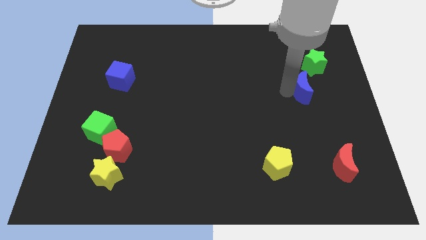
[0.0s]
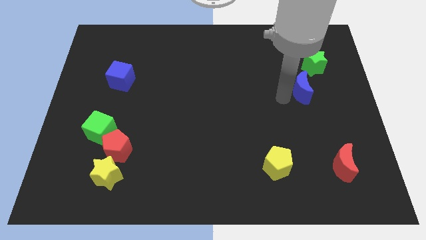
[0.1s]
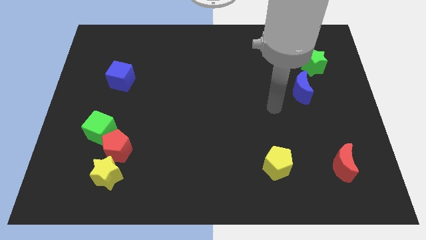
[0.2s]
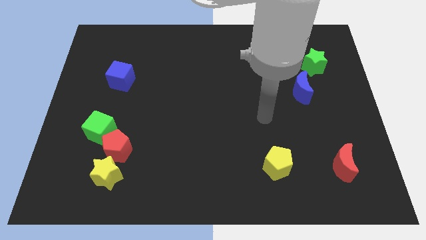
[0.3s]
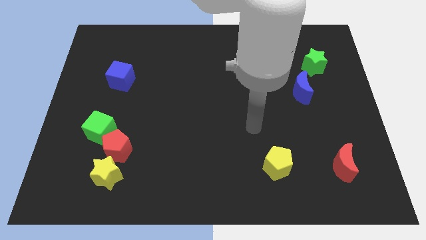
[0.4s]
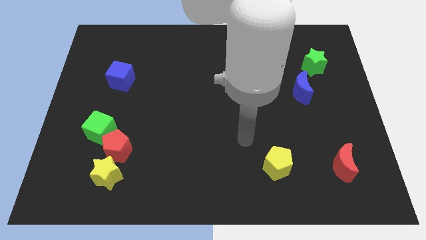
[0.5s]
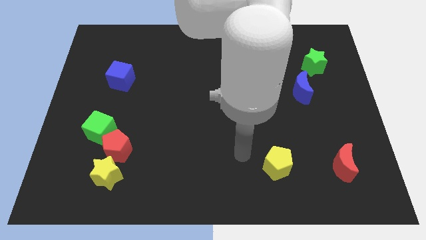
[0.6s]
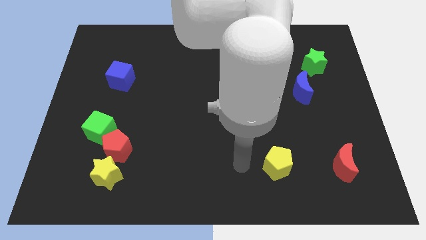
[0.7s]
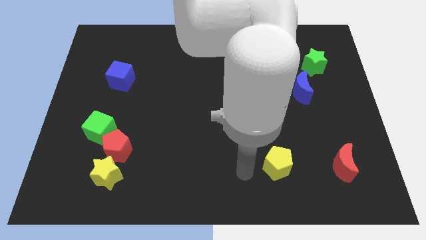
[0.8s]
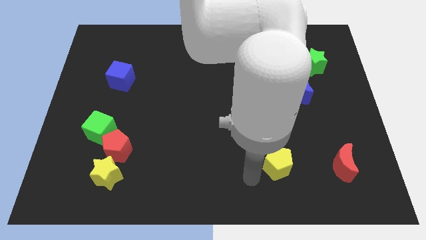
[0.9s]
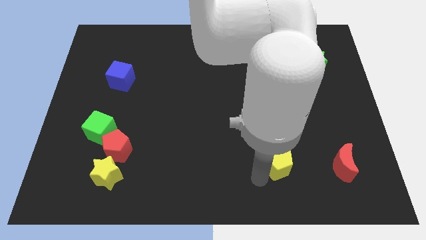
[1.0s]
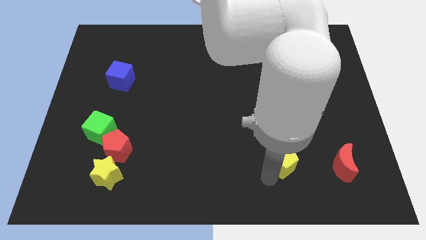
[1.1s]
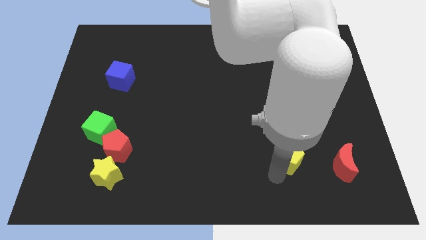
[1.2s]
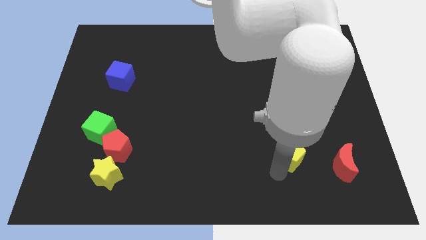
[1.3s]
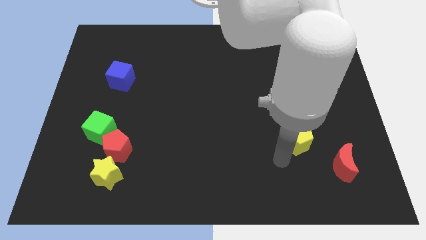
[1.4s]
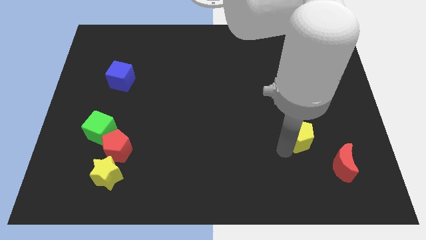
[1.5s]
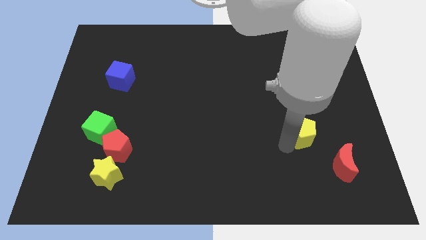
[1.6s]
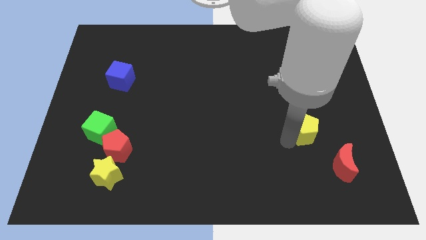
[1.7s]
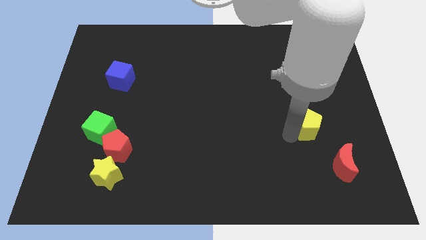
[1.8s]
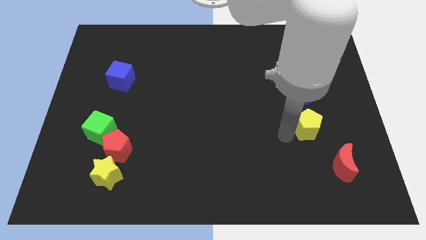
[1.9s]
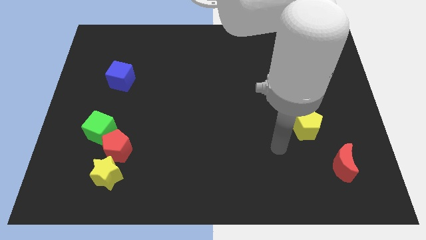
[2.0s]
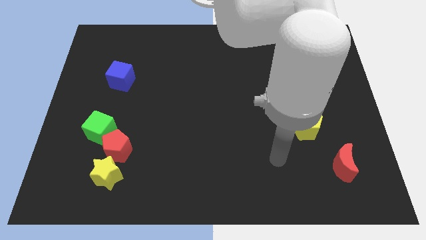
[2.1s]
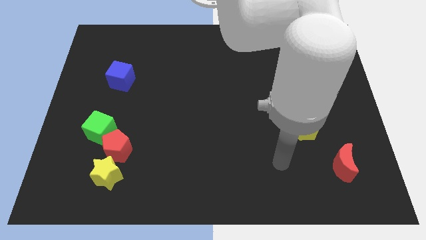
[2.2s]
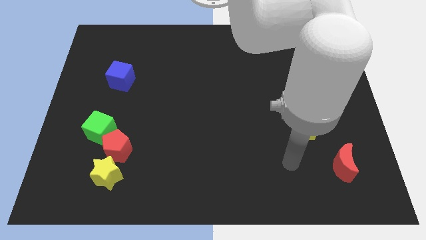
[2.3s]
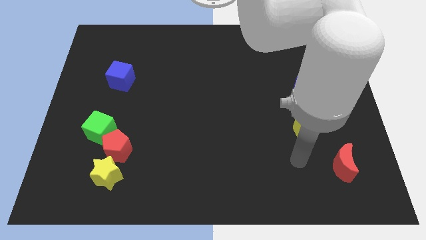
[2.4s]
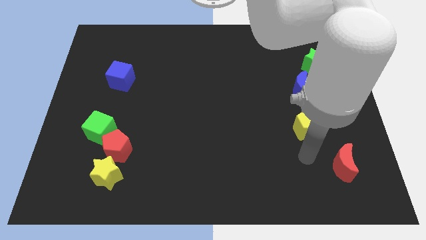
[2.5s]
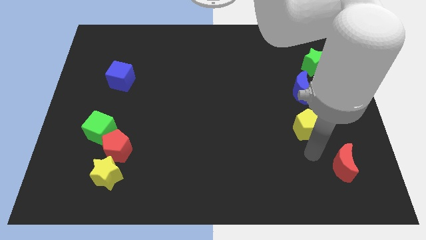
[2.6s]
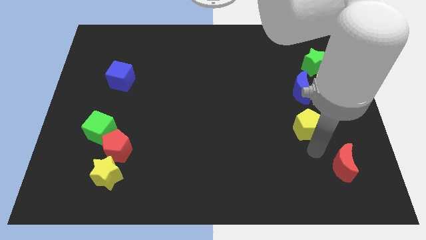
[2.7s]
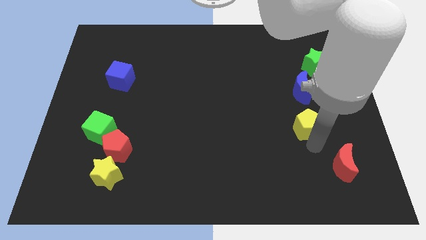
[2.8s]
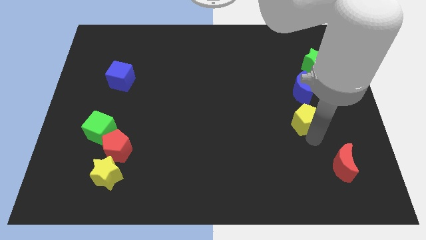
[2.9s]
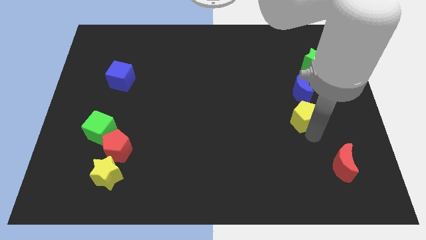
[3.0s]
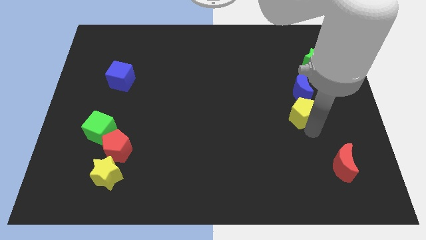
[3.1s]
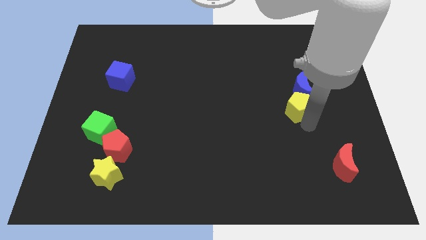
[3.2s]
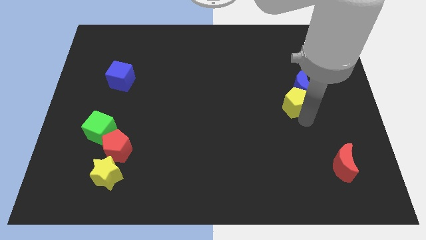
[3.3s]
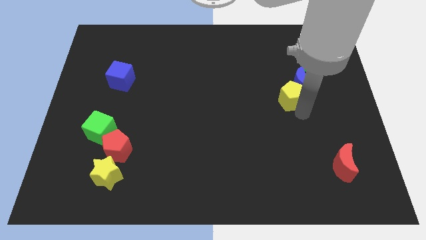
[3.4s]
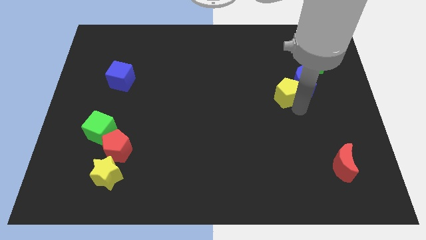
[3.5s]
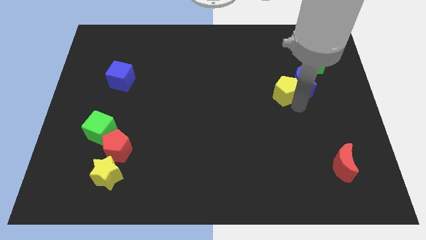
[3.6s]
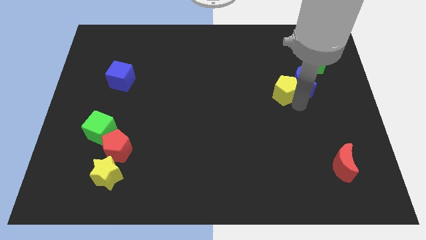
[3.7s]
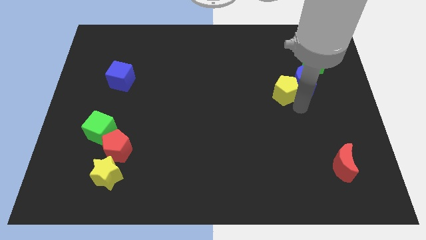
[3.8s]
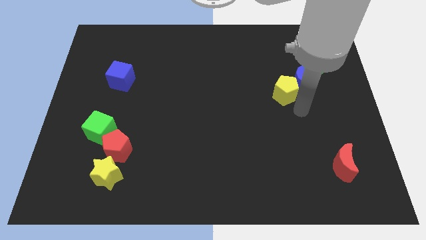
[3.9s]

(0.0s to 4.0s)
move the yellow pentagon to the left side of the blue crescent

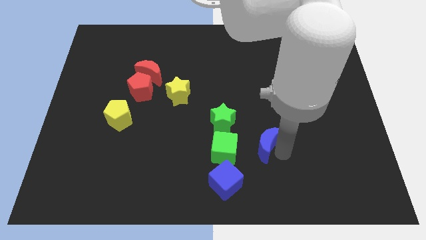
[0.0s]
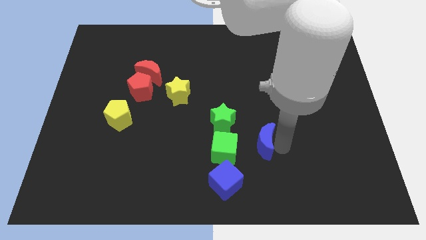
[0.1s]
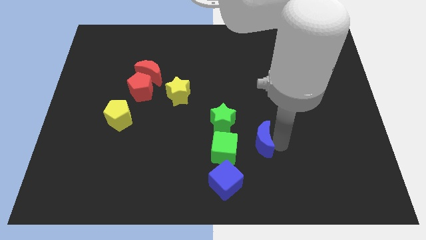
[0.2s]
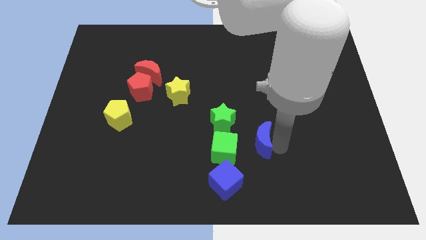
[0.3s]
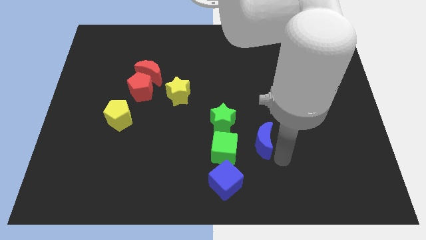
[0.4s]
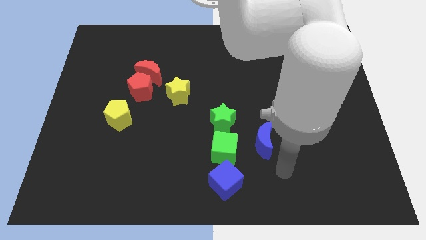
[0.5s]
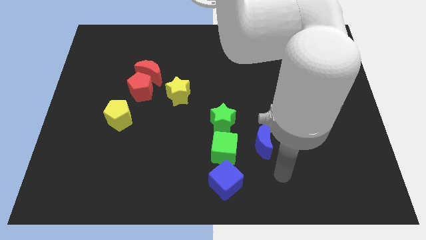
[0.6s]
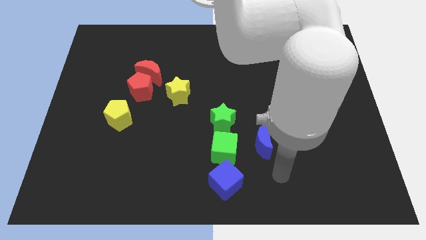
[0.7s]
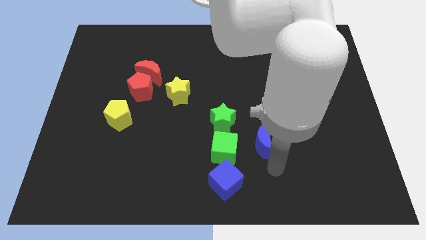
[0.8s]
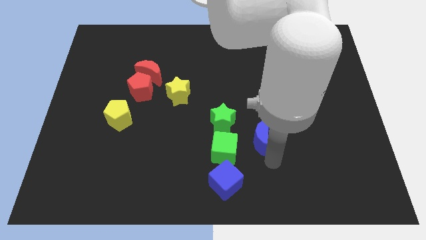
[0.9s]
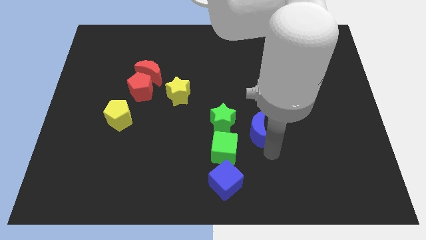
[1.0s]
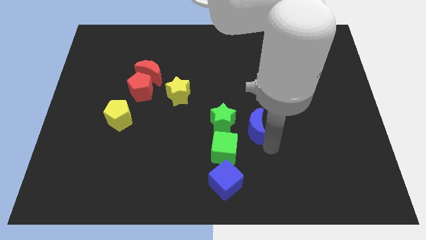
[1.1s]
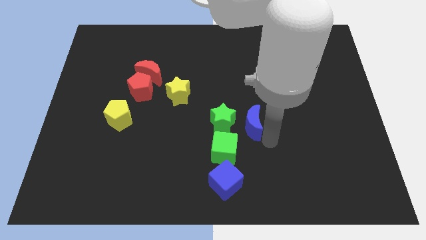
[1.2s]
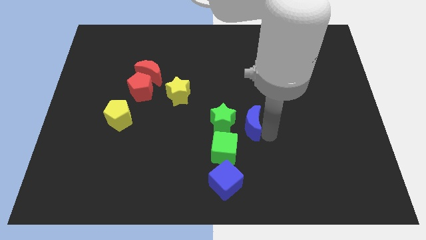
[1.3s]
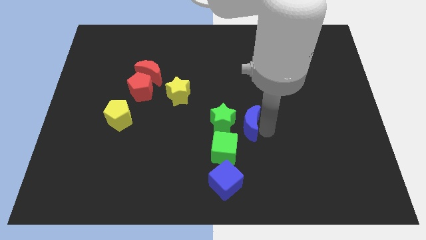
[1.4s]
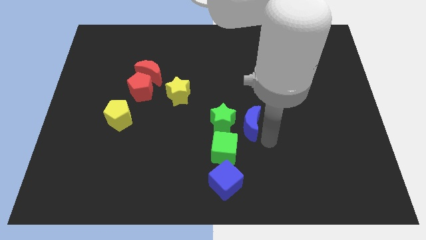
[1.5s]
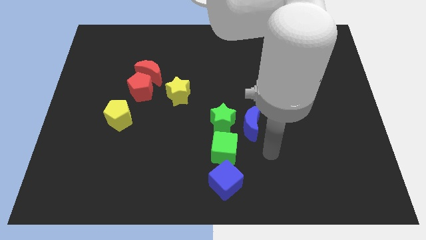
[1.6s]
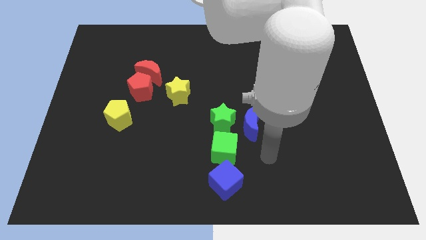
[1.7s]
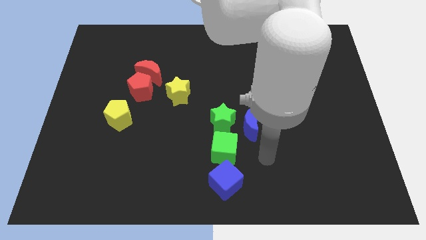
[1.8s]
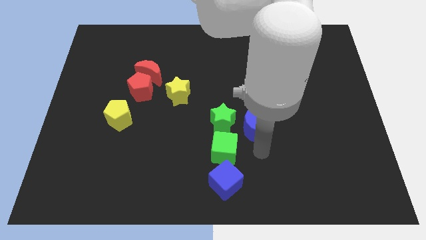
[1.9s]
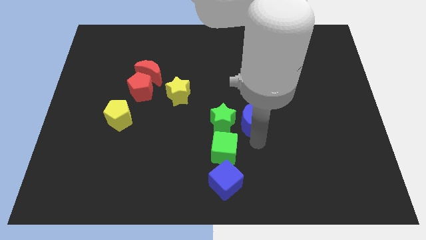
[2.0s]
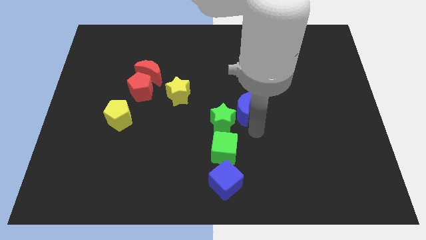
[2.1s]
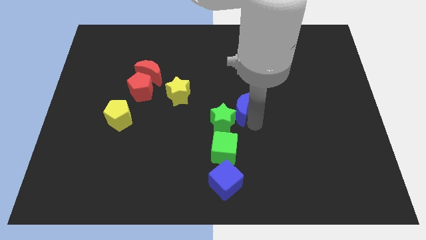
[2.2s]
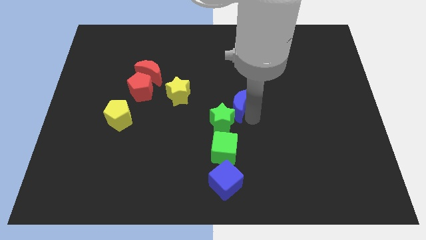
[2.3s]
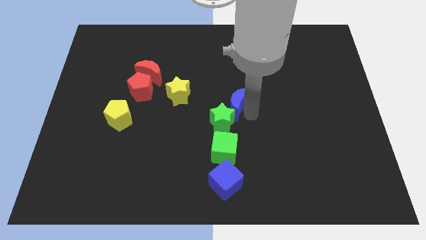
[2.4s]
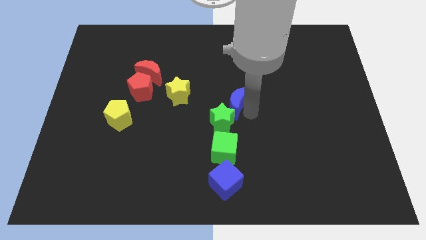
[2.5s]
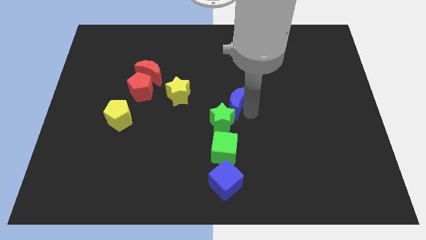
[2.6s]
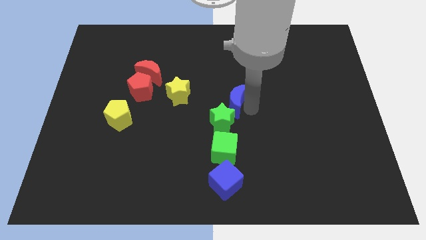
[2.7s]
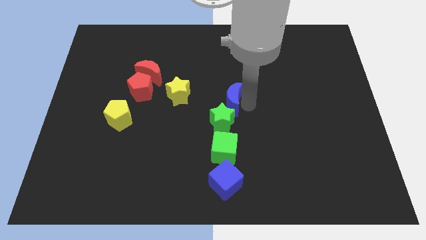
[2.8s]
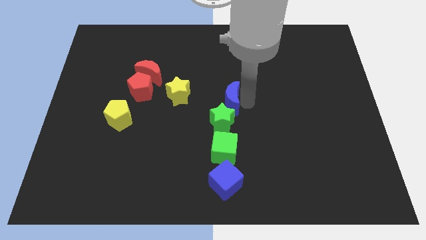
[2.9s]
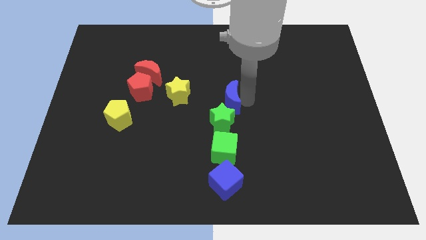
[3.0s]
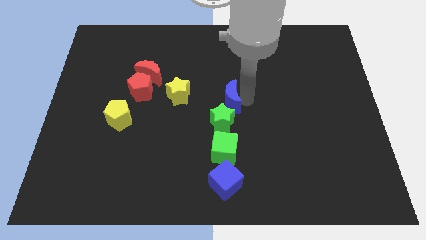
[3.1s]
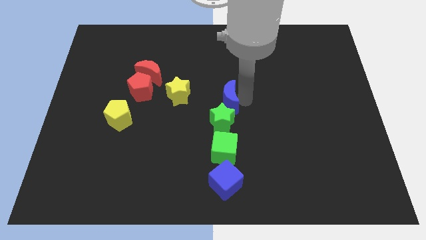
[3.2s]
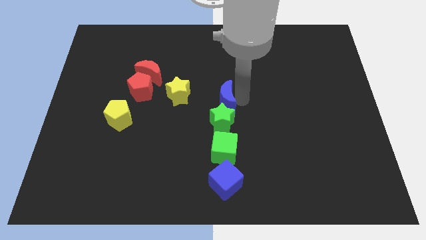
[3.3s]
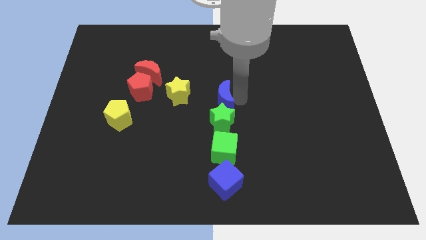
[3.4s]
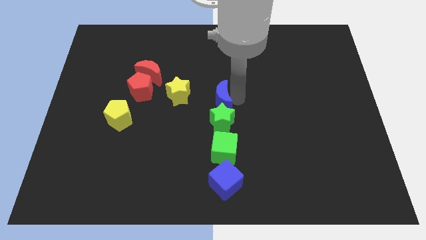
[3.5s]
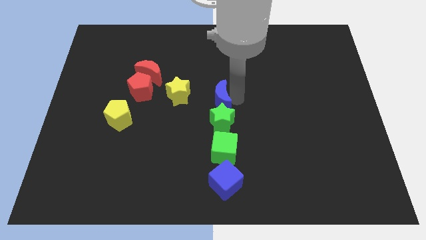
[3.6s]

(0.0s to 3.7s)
move the blue crescent to the top of the green star

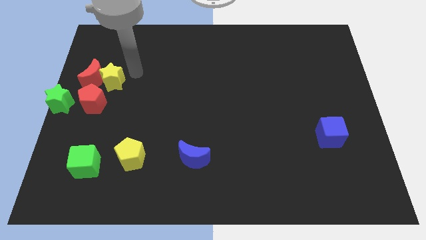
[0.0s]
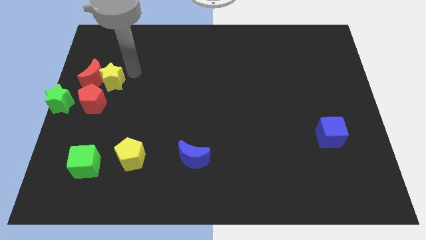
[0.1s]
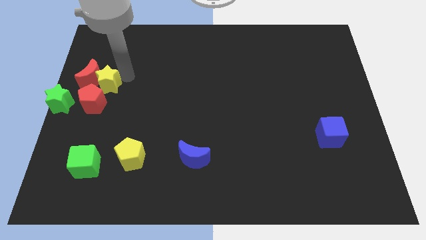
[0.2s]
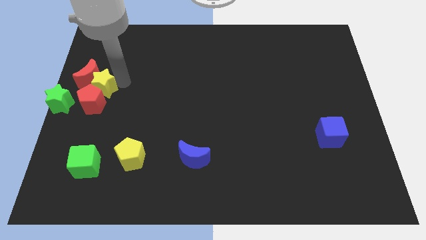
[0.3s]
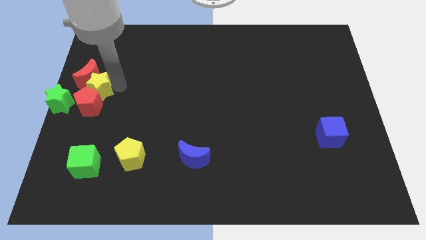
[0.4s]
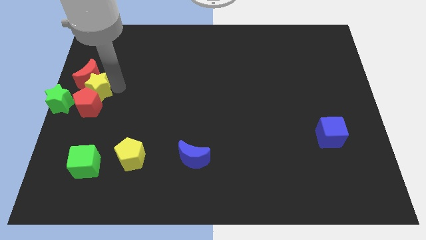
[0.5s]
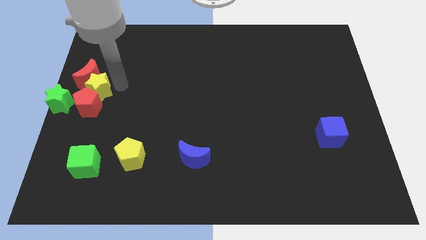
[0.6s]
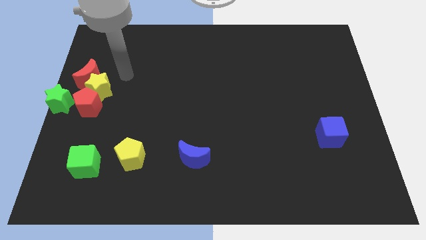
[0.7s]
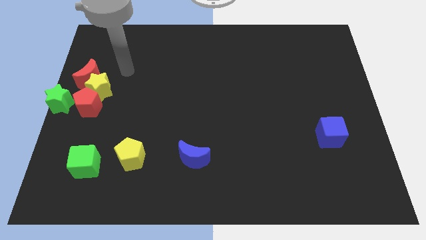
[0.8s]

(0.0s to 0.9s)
push the yellow star into the red pentagon

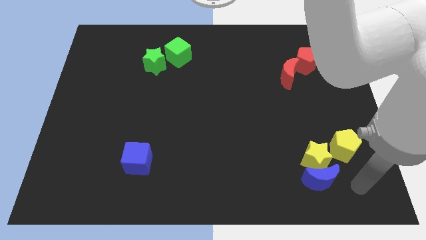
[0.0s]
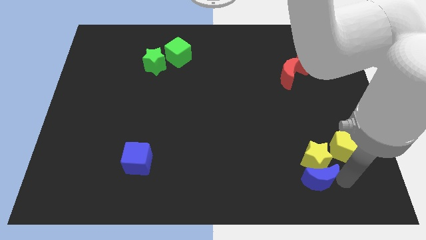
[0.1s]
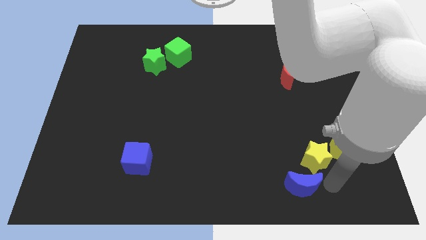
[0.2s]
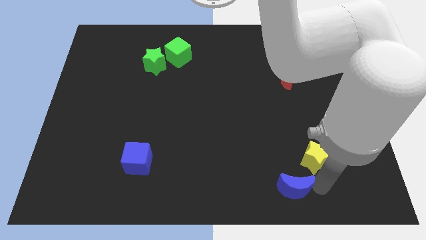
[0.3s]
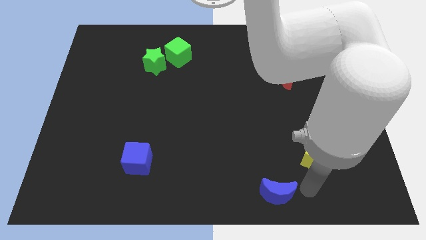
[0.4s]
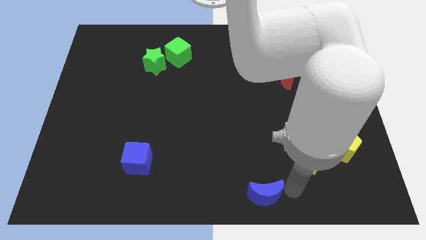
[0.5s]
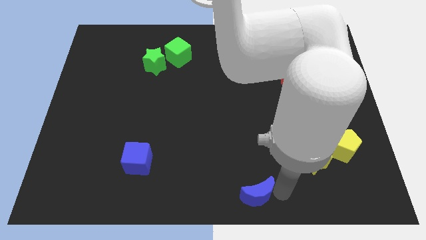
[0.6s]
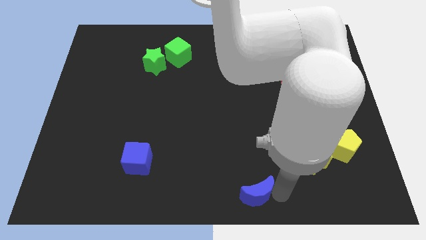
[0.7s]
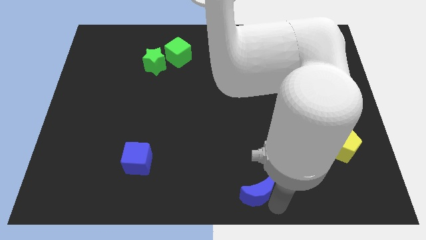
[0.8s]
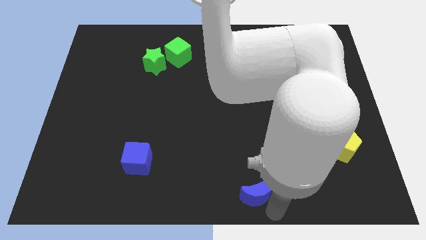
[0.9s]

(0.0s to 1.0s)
separate the blue crescent from the yellow star
